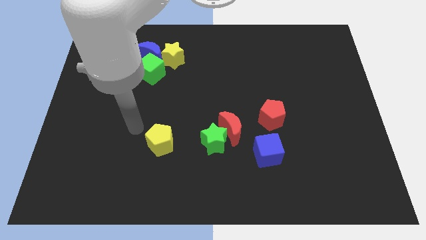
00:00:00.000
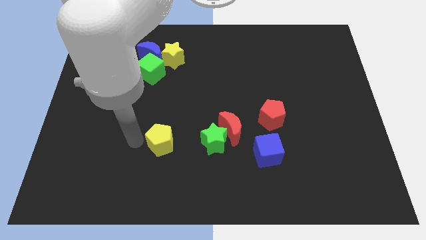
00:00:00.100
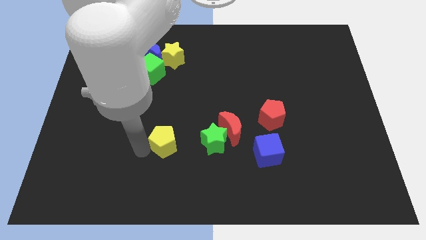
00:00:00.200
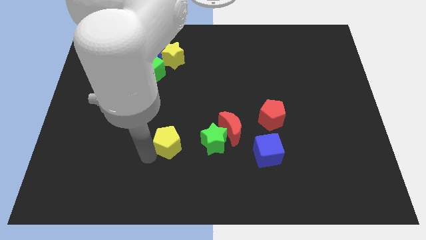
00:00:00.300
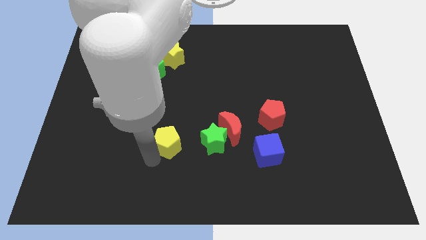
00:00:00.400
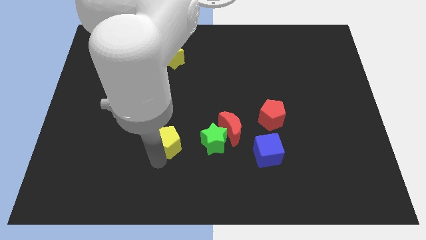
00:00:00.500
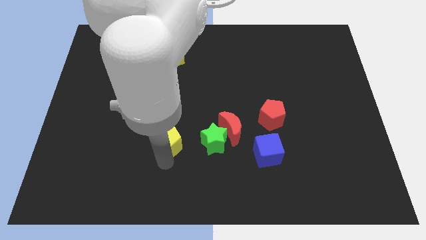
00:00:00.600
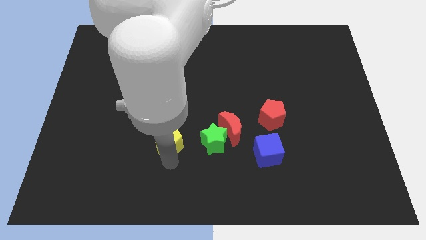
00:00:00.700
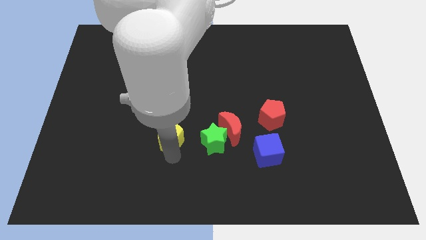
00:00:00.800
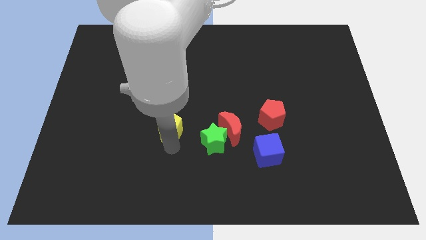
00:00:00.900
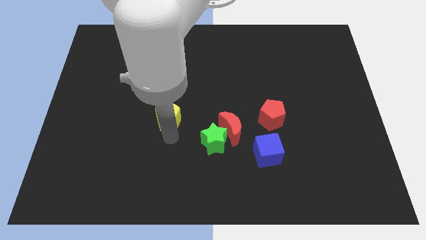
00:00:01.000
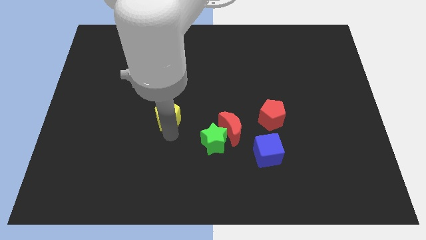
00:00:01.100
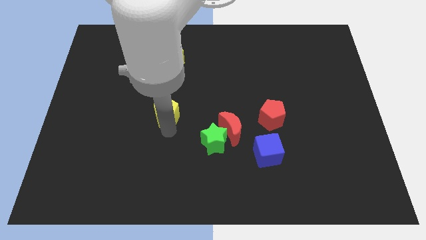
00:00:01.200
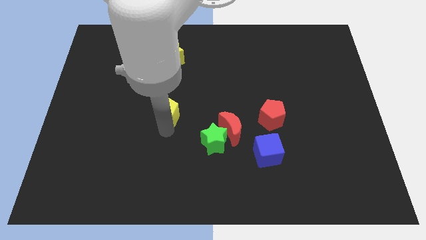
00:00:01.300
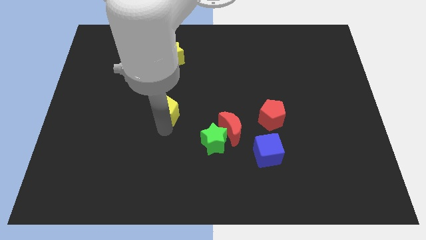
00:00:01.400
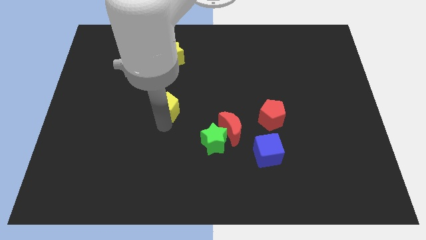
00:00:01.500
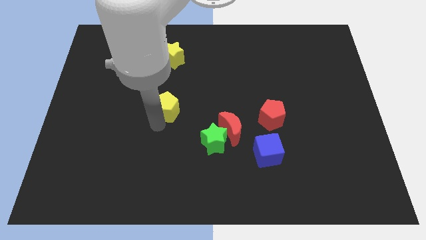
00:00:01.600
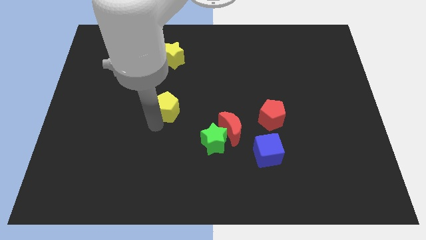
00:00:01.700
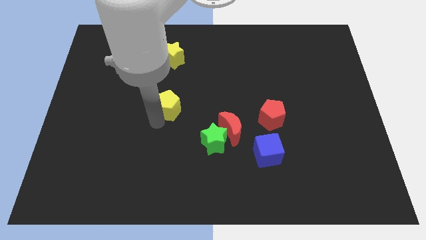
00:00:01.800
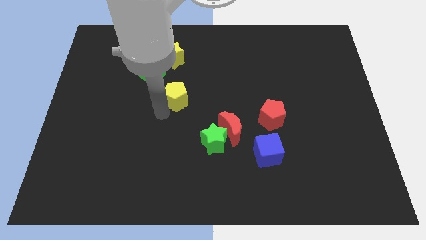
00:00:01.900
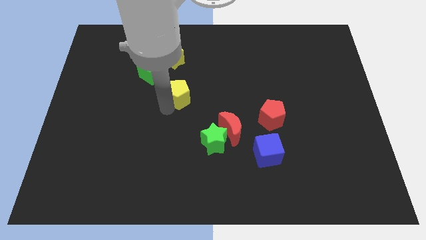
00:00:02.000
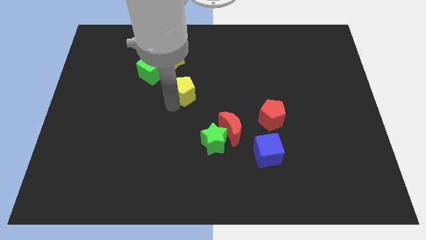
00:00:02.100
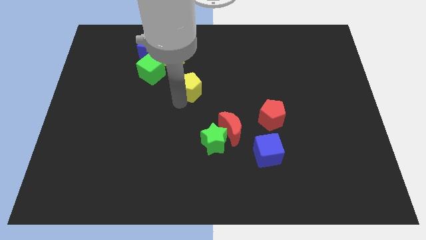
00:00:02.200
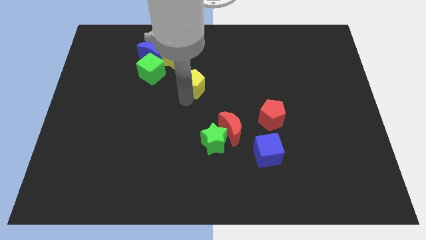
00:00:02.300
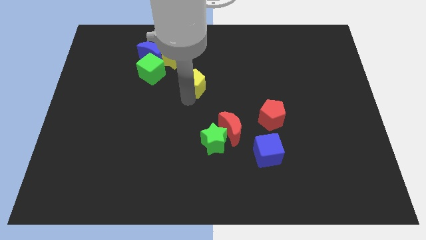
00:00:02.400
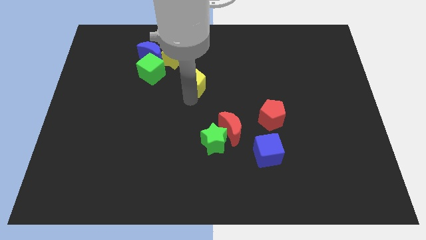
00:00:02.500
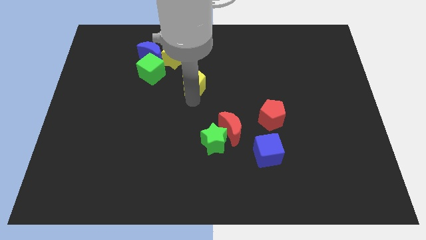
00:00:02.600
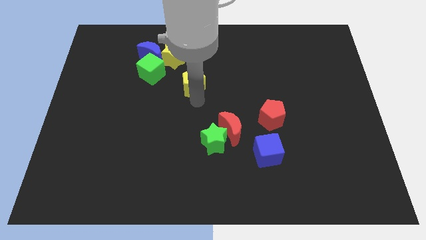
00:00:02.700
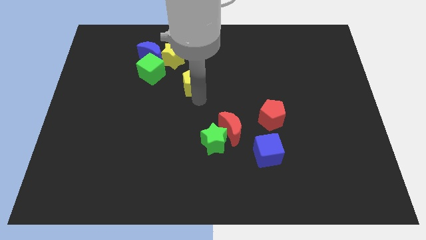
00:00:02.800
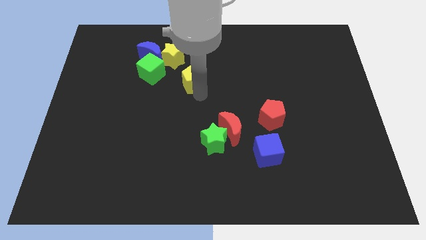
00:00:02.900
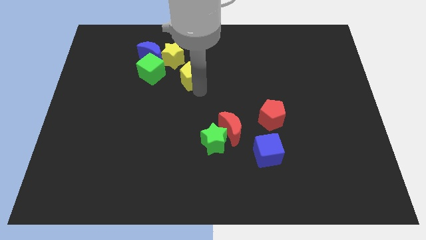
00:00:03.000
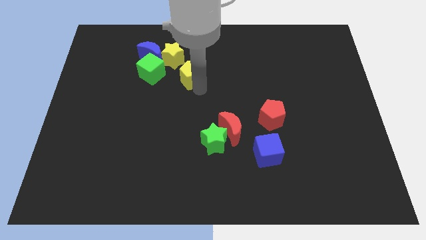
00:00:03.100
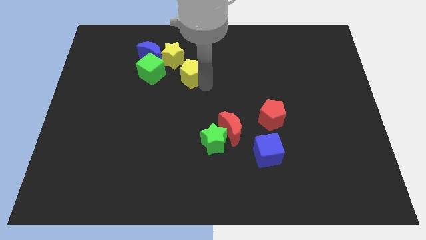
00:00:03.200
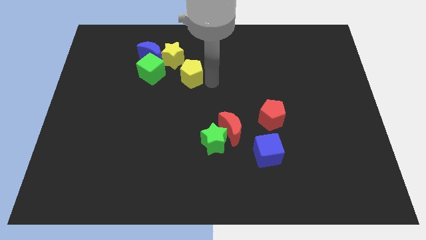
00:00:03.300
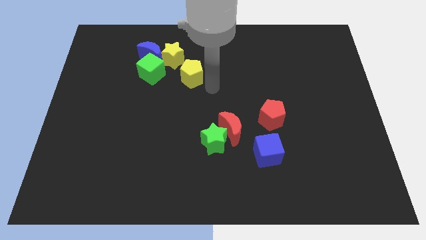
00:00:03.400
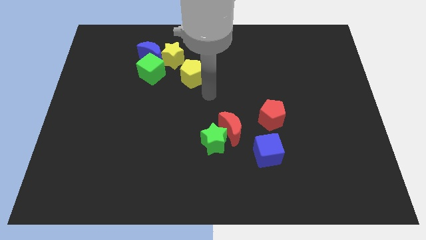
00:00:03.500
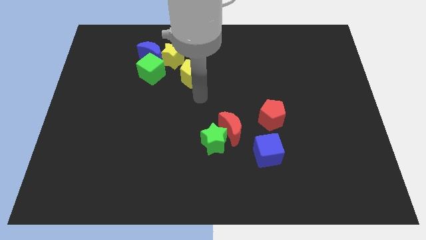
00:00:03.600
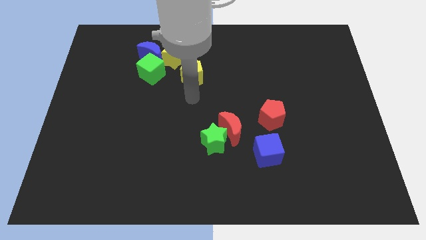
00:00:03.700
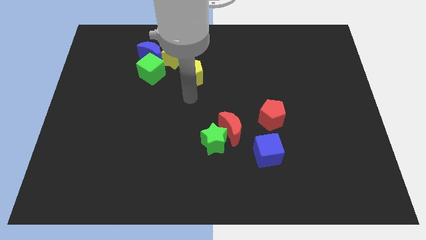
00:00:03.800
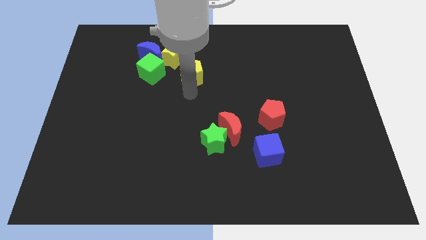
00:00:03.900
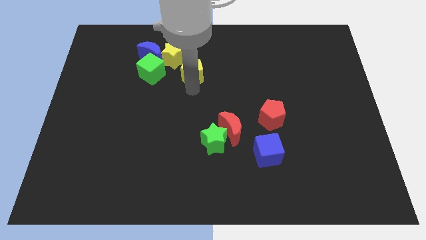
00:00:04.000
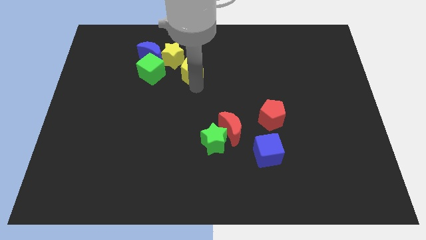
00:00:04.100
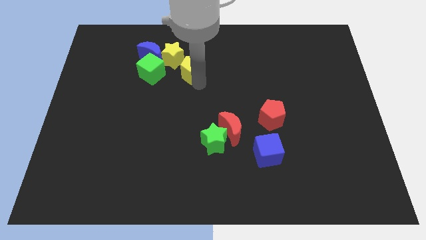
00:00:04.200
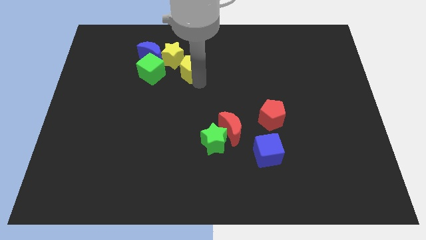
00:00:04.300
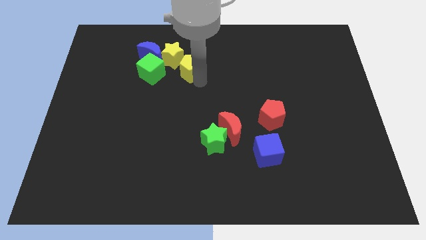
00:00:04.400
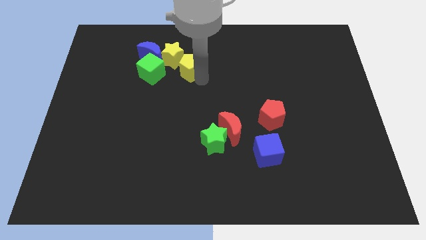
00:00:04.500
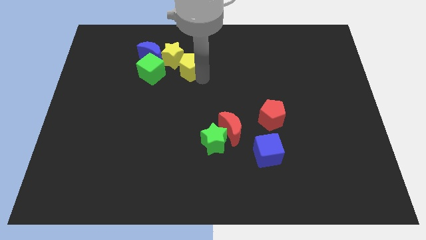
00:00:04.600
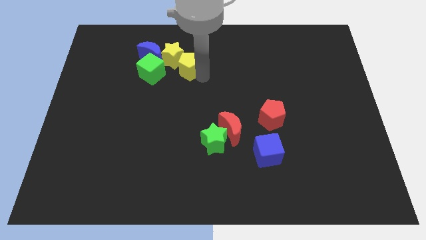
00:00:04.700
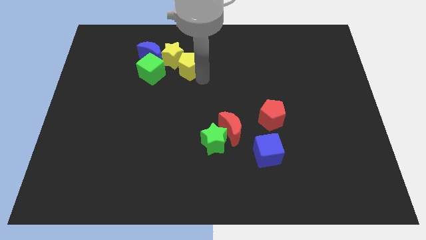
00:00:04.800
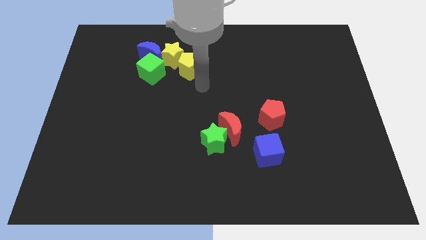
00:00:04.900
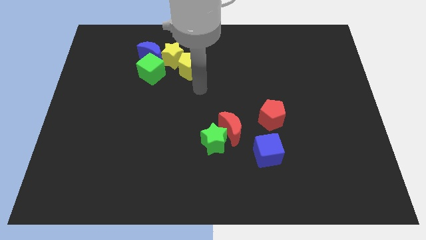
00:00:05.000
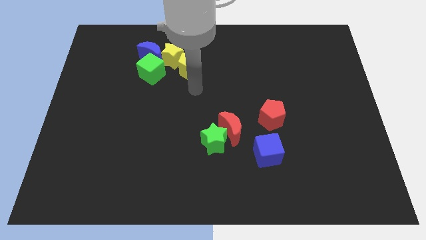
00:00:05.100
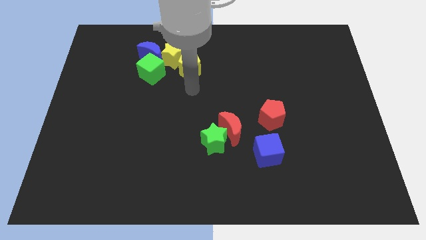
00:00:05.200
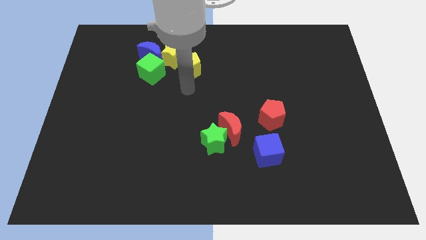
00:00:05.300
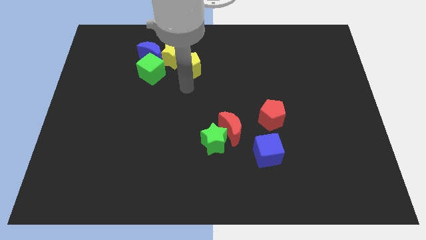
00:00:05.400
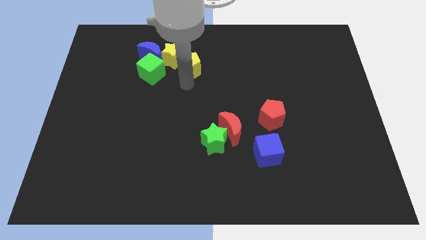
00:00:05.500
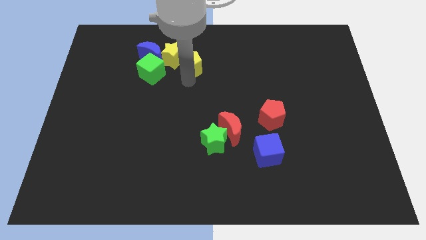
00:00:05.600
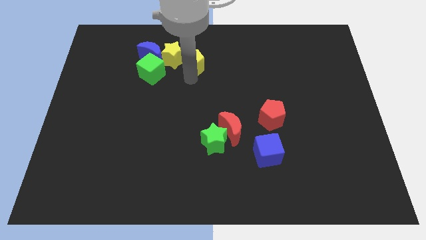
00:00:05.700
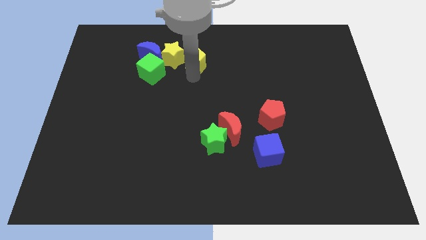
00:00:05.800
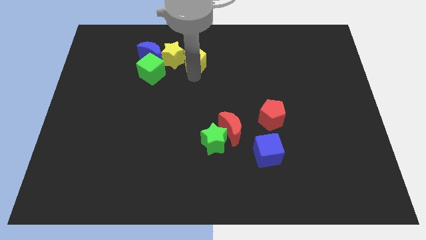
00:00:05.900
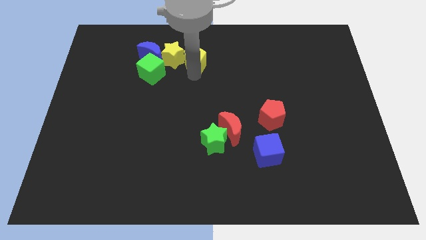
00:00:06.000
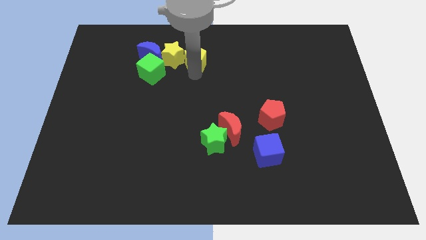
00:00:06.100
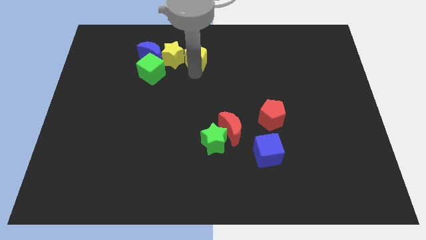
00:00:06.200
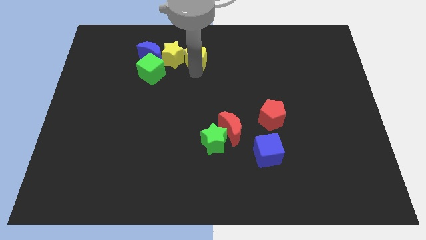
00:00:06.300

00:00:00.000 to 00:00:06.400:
move the yellow pentagon to the right of the yellow star

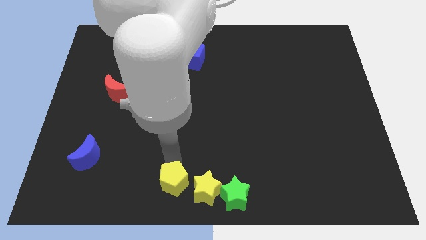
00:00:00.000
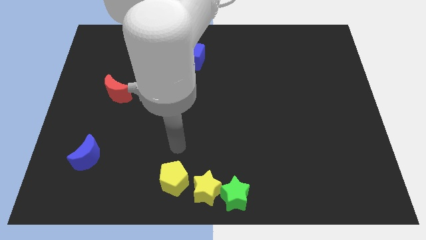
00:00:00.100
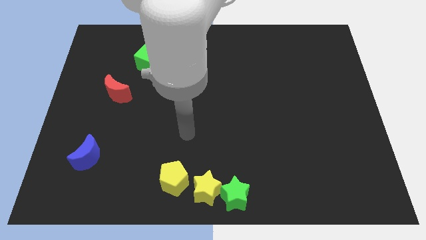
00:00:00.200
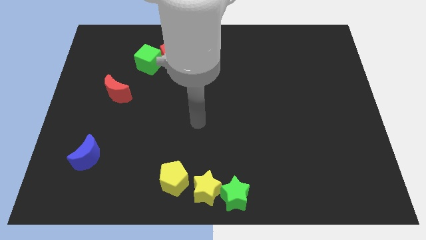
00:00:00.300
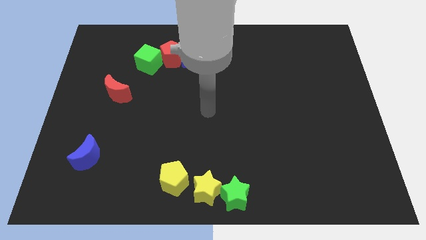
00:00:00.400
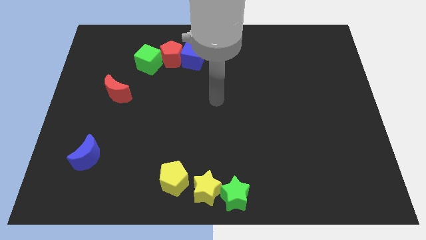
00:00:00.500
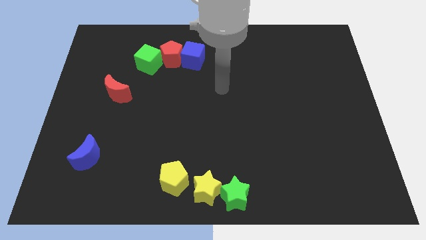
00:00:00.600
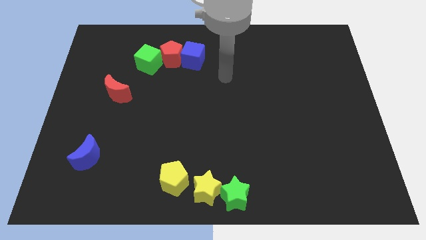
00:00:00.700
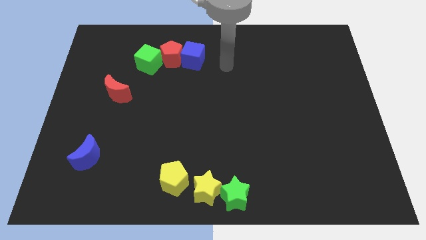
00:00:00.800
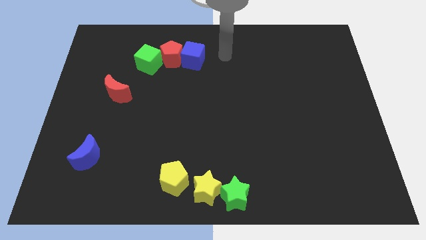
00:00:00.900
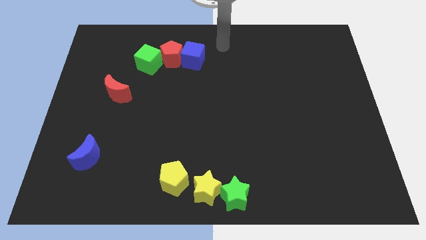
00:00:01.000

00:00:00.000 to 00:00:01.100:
move your arm away from the yellow pentagon

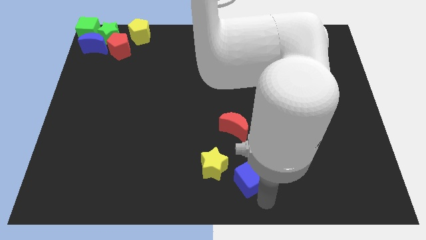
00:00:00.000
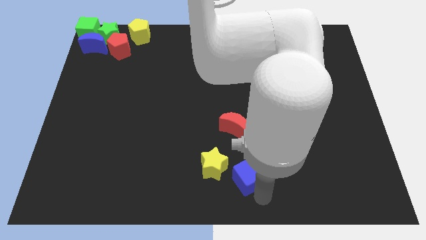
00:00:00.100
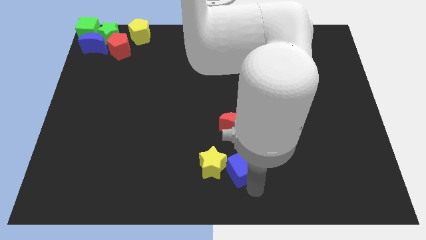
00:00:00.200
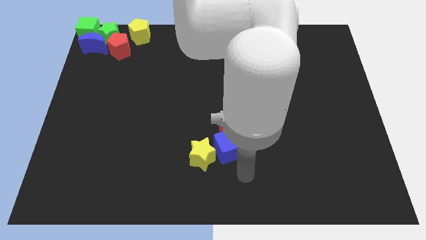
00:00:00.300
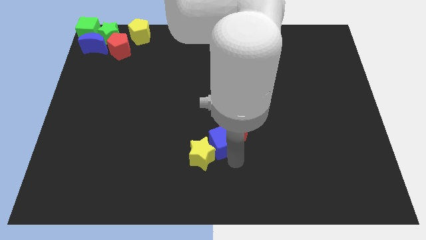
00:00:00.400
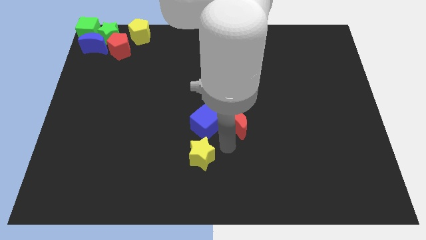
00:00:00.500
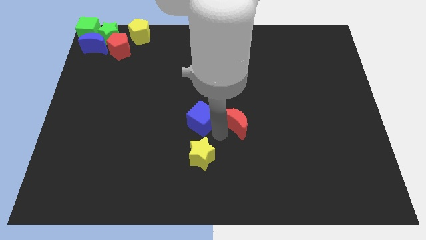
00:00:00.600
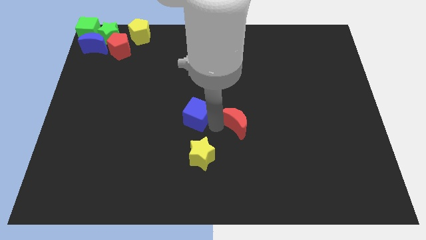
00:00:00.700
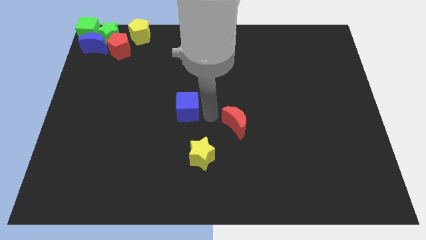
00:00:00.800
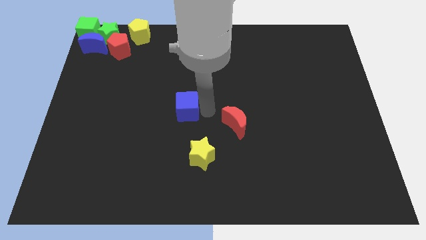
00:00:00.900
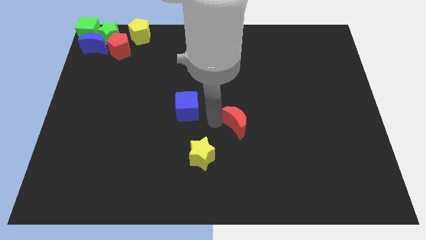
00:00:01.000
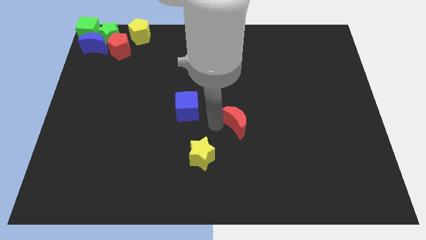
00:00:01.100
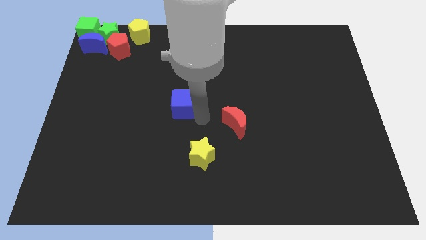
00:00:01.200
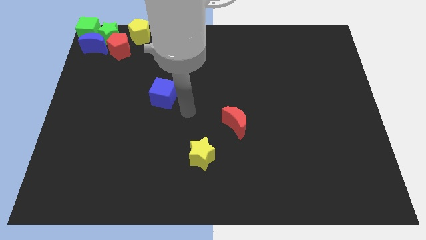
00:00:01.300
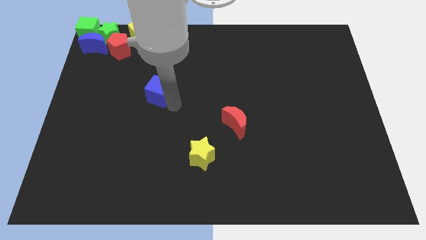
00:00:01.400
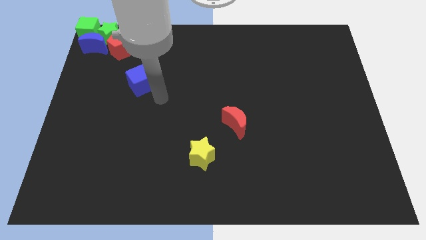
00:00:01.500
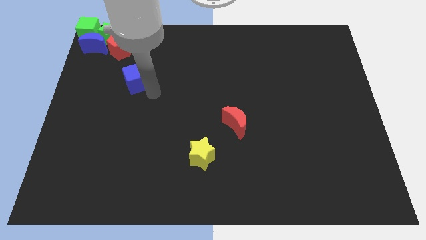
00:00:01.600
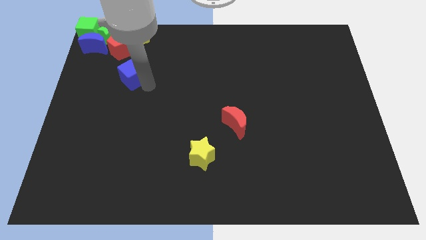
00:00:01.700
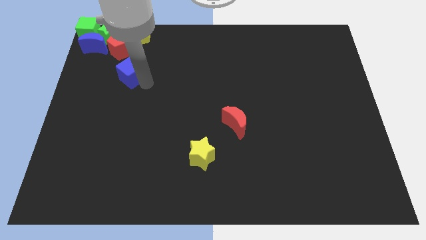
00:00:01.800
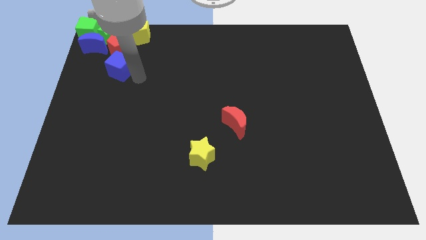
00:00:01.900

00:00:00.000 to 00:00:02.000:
push blue cube below red pentagon
